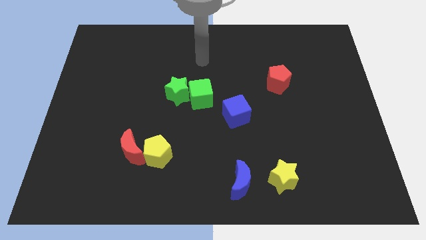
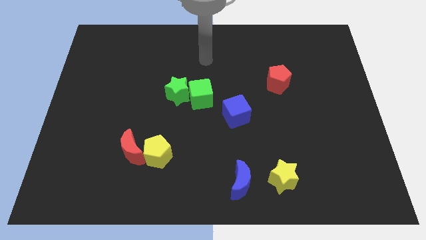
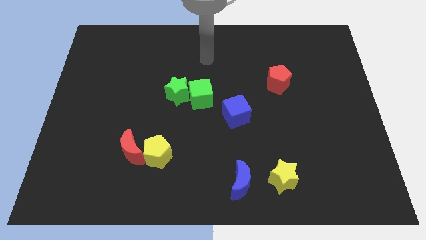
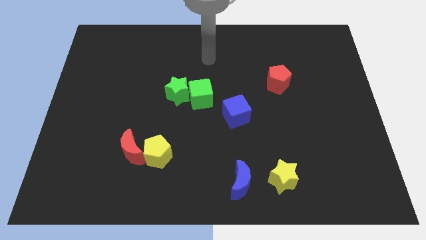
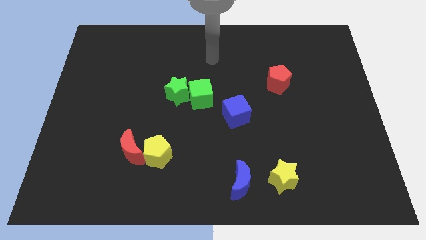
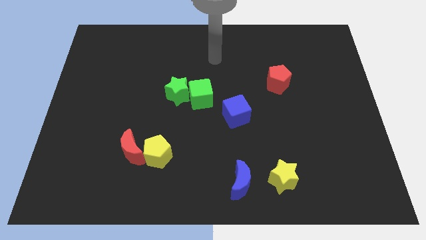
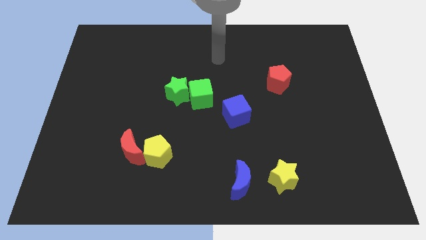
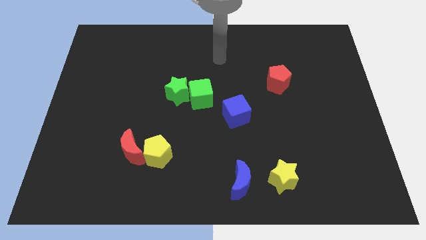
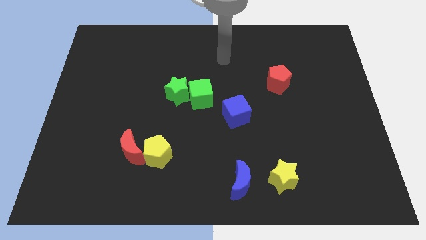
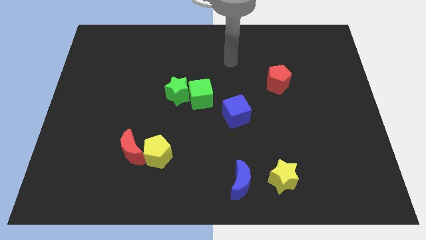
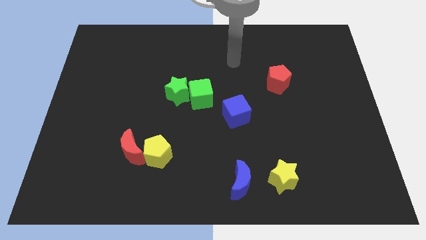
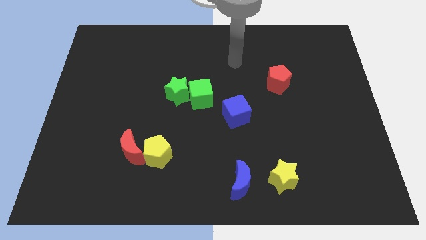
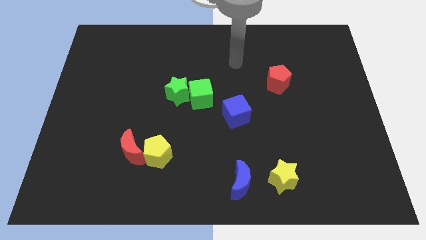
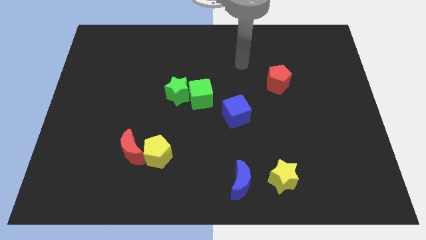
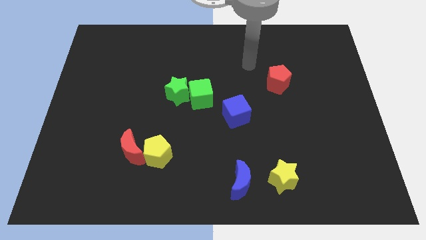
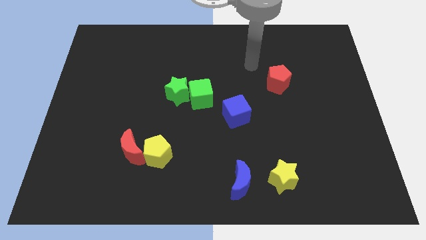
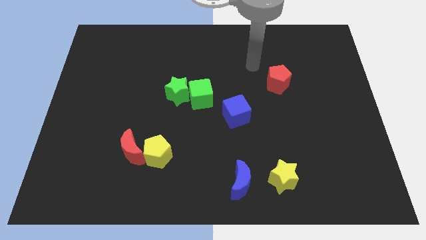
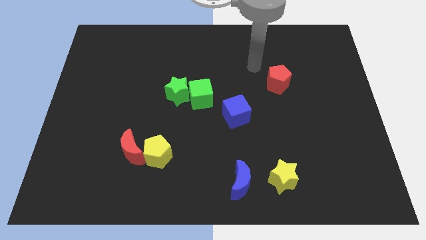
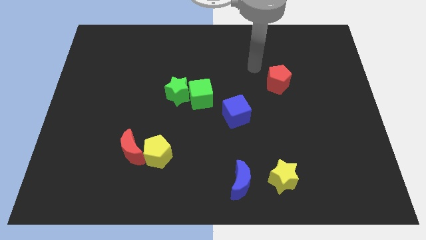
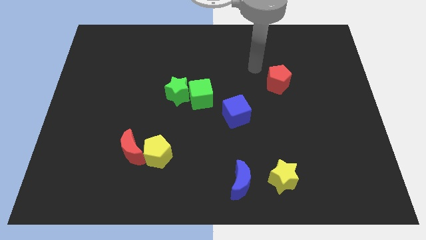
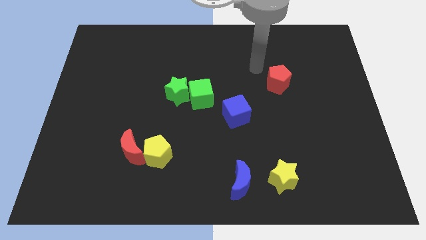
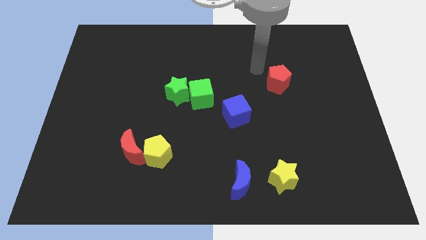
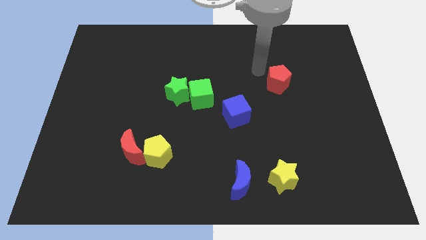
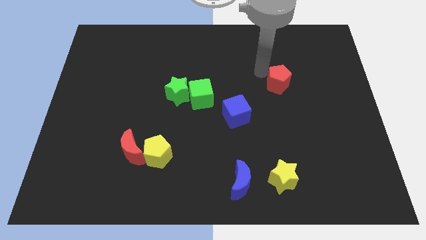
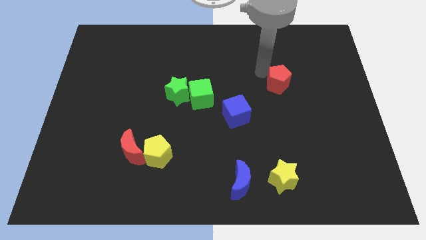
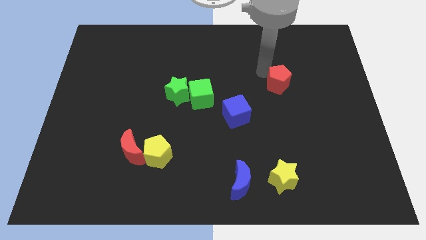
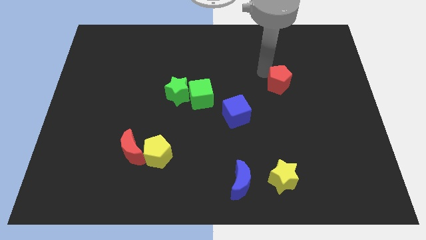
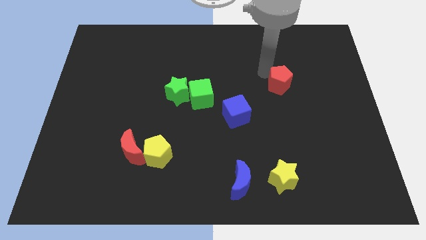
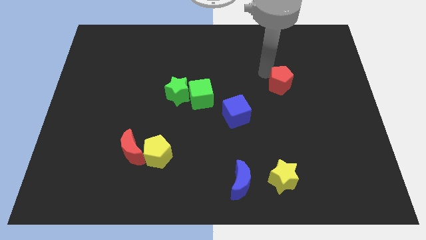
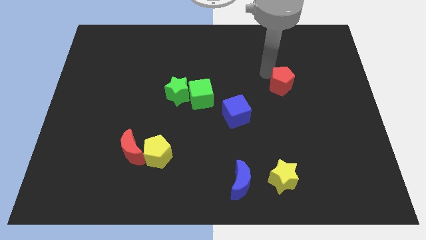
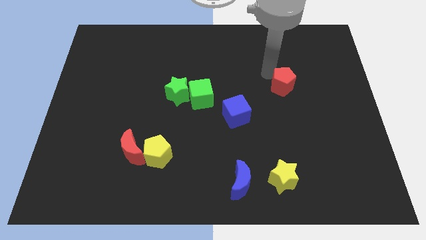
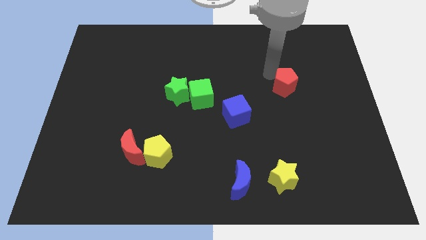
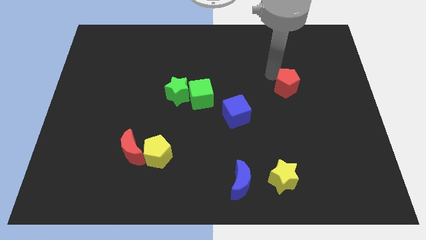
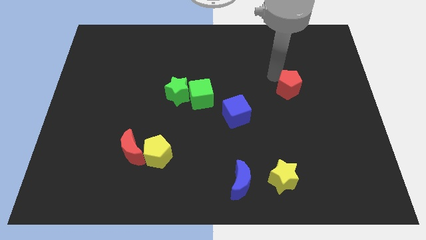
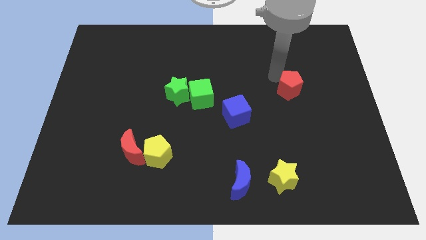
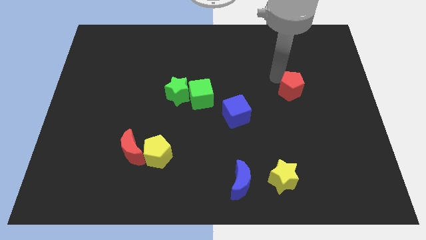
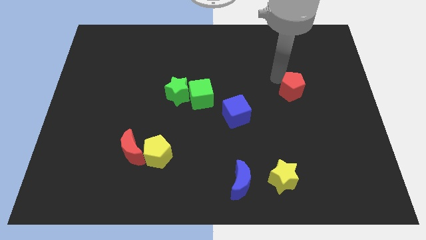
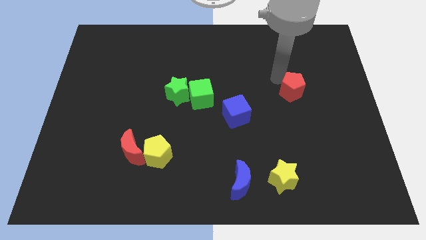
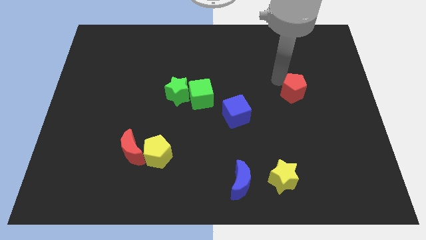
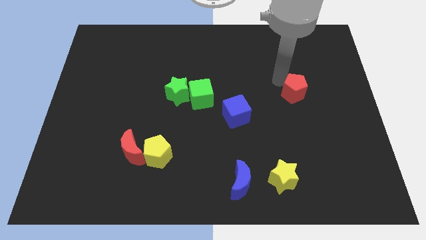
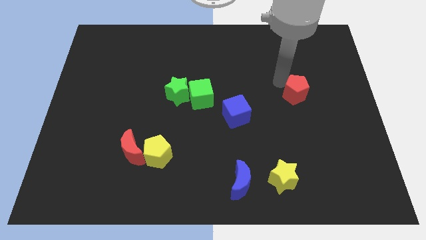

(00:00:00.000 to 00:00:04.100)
move the red pentagon down slightly

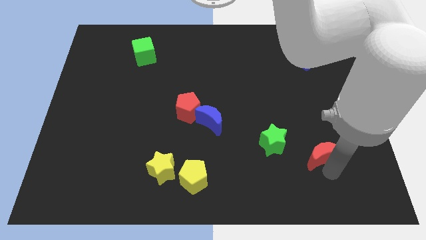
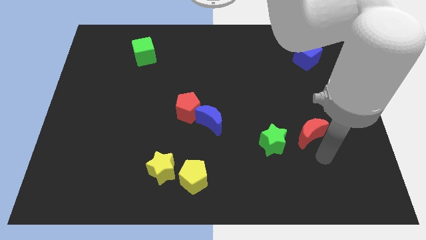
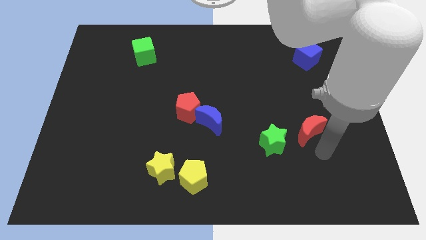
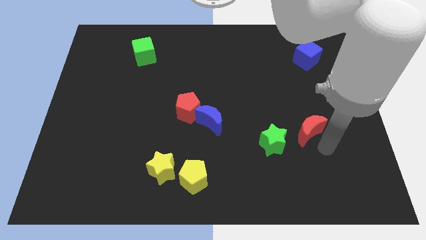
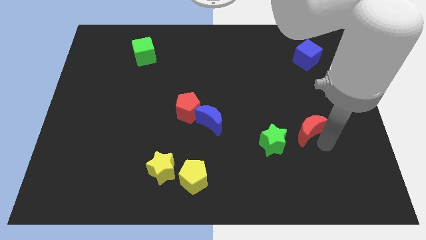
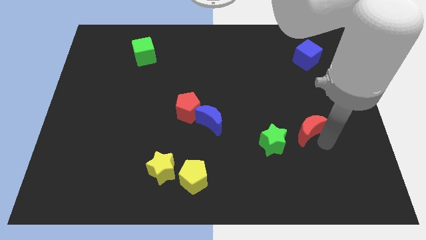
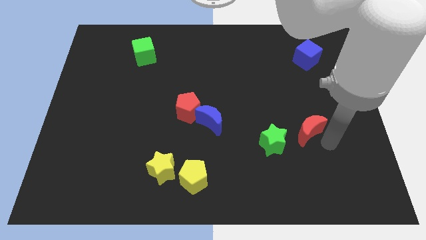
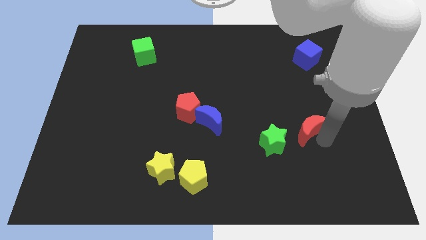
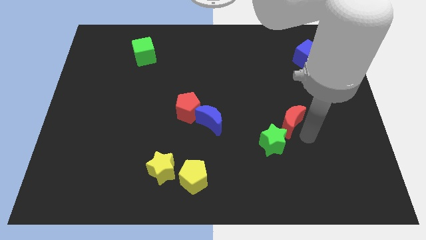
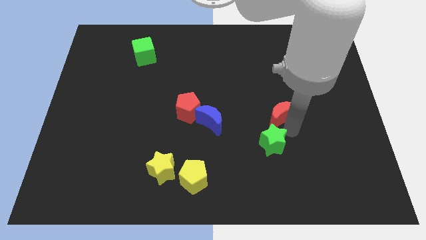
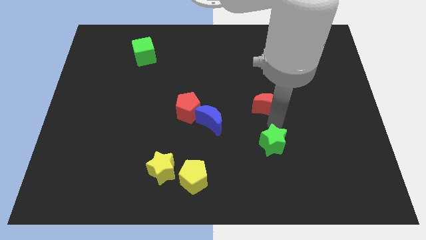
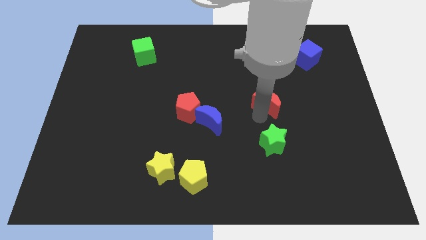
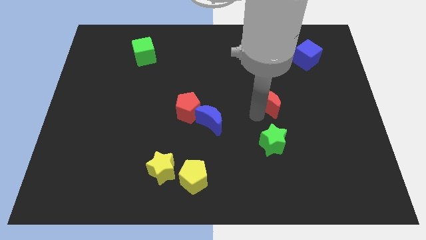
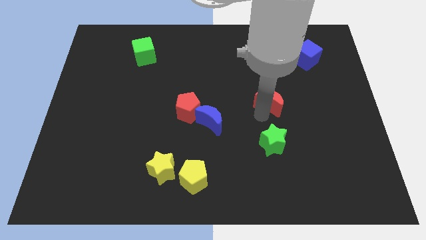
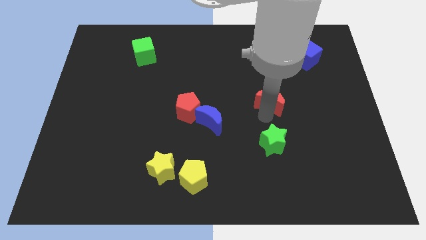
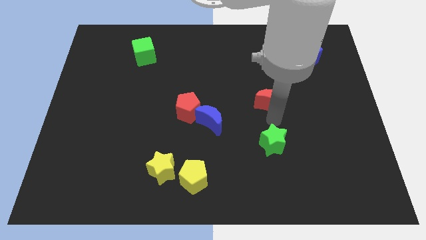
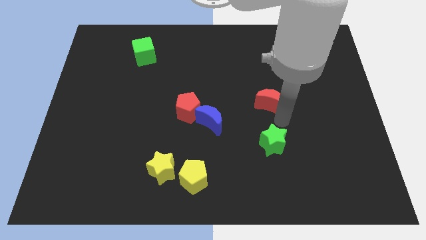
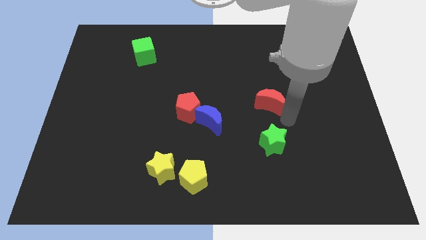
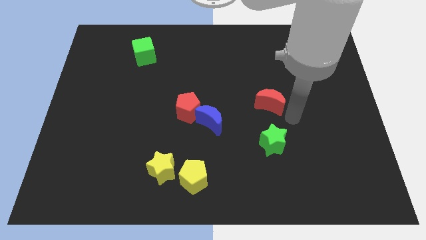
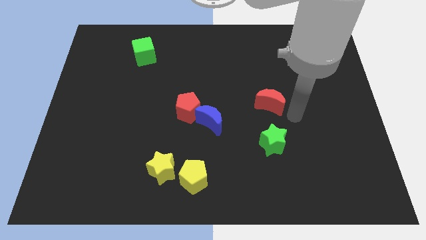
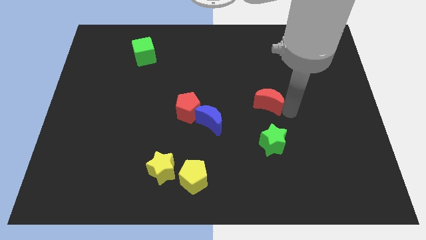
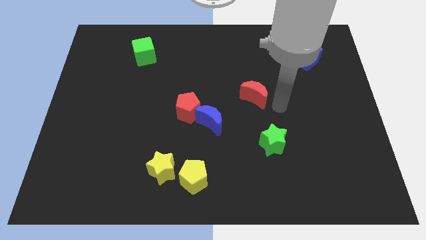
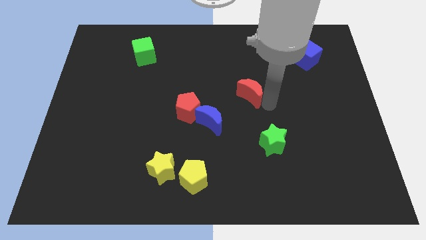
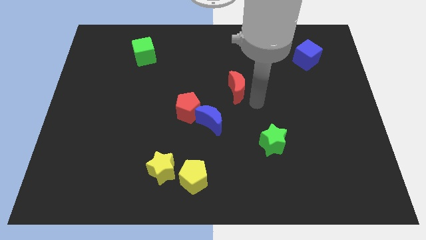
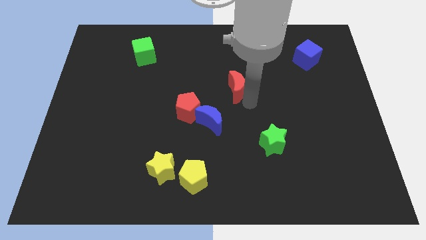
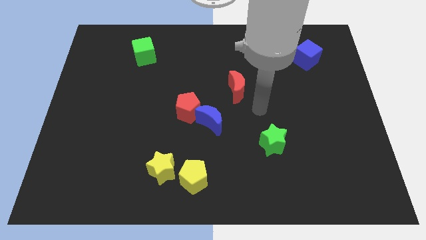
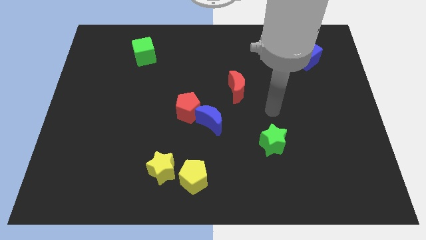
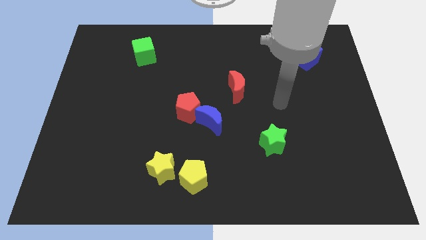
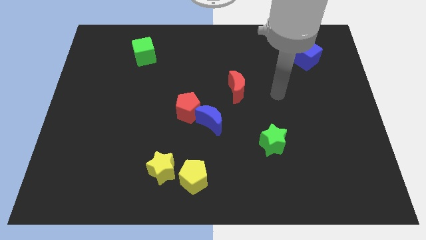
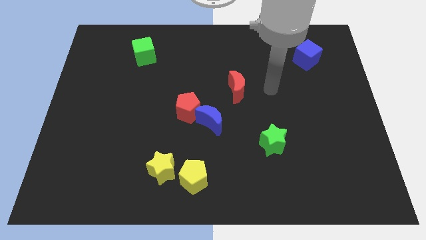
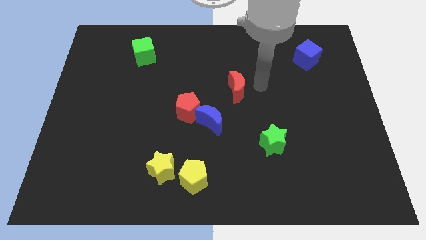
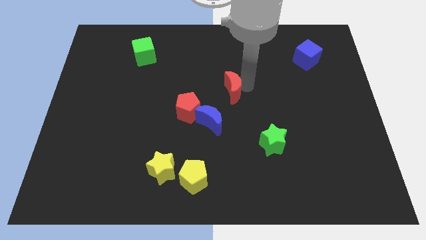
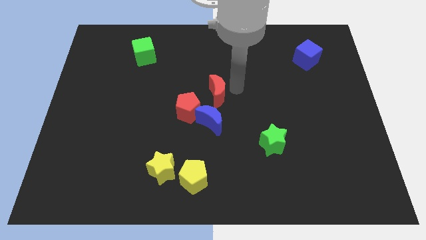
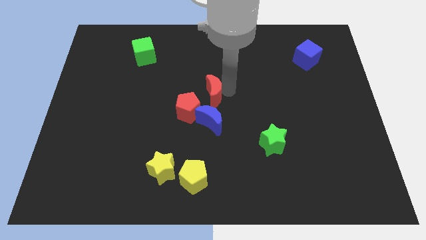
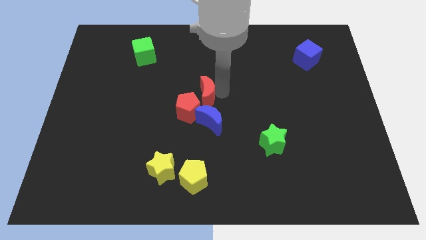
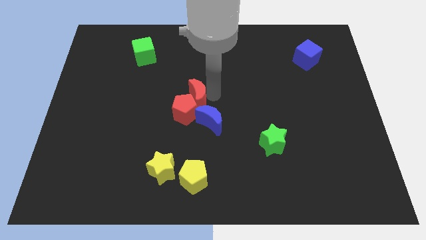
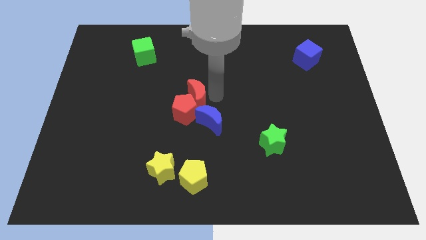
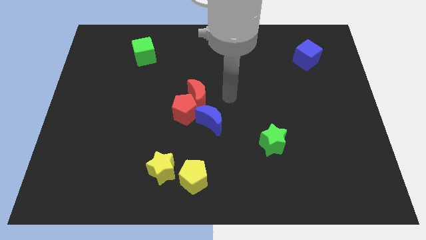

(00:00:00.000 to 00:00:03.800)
push the red crescent to the top of the red pentagon

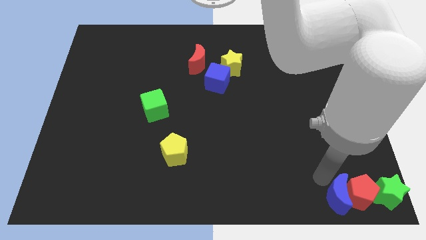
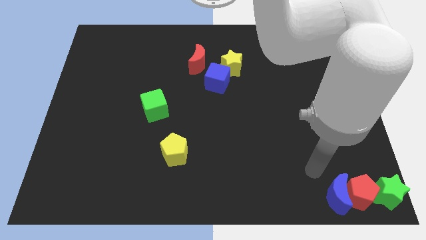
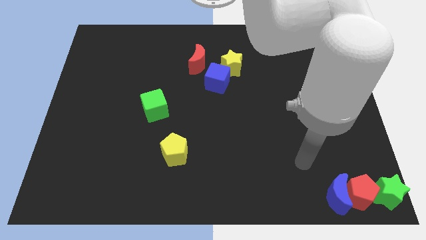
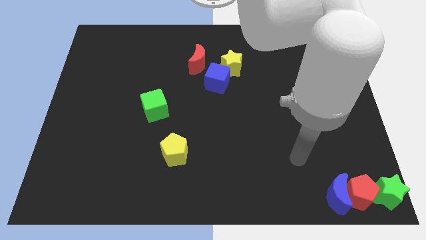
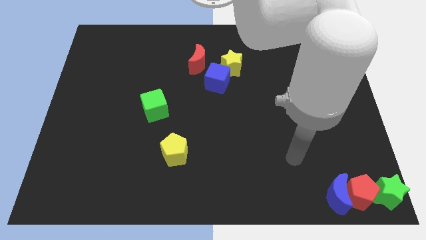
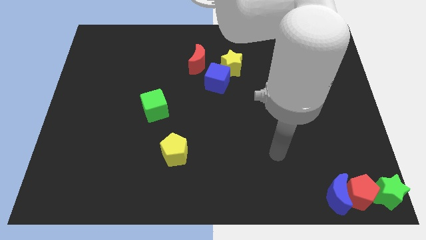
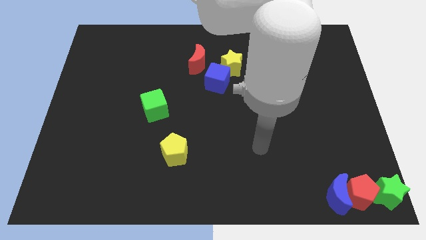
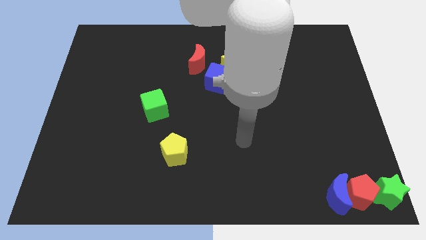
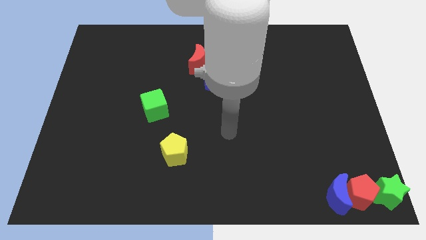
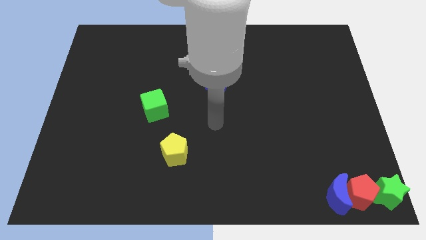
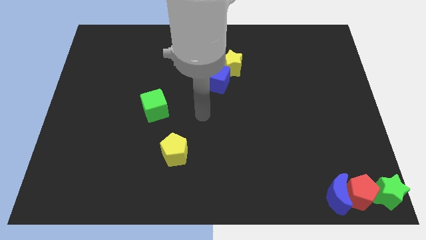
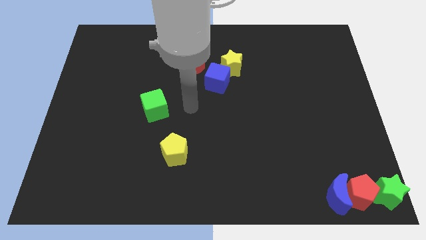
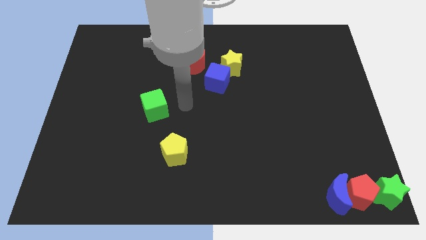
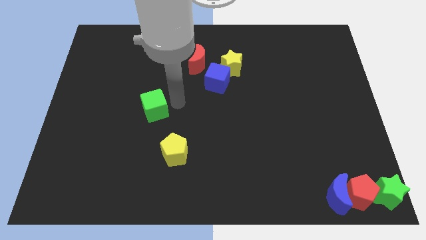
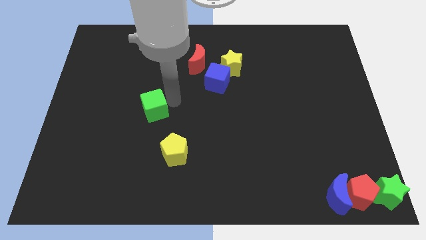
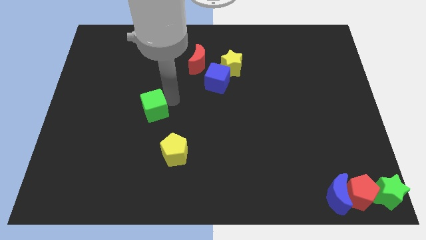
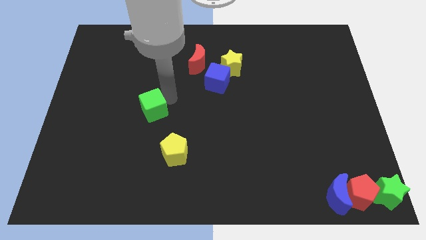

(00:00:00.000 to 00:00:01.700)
point your arm at the right of the green cube
